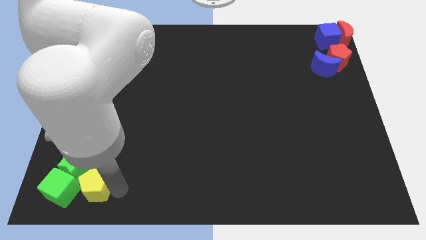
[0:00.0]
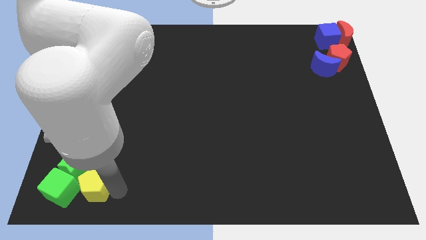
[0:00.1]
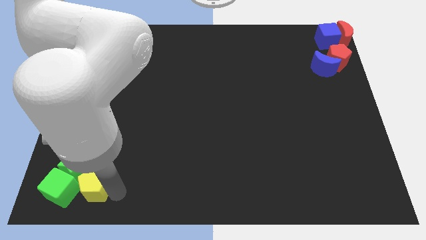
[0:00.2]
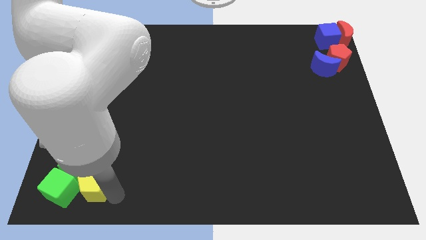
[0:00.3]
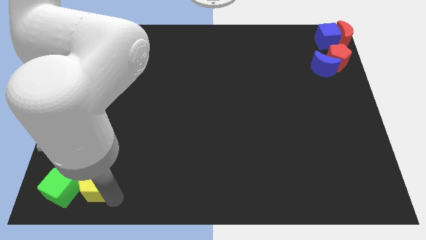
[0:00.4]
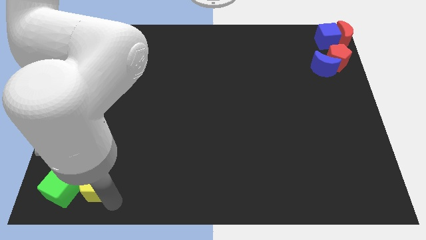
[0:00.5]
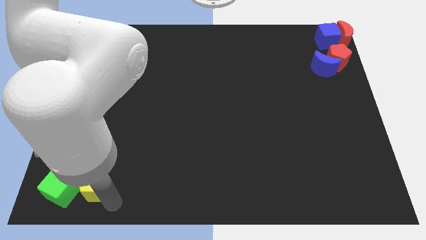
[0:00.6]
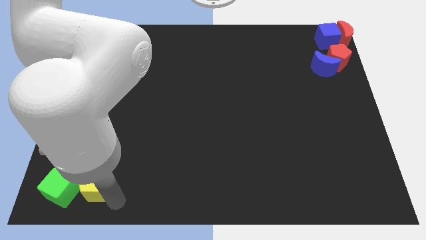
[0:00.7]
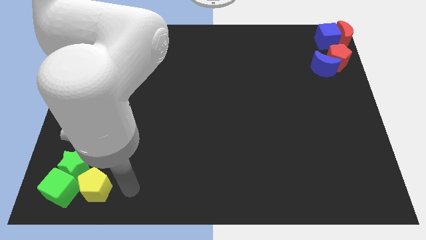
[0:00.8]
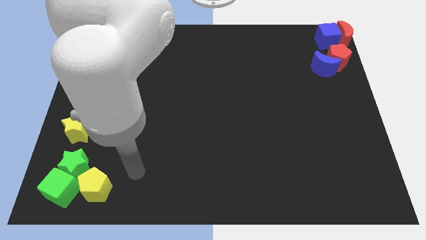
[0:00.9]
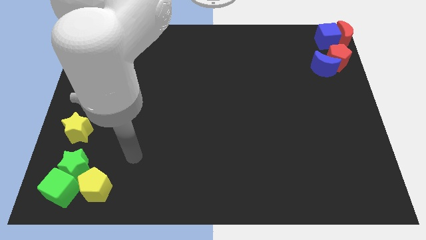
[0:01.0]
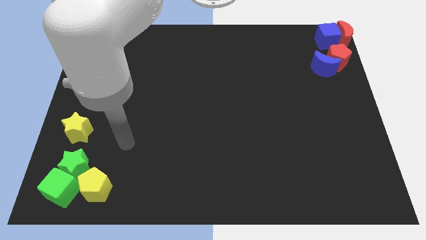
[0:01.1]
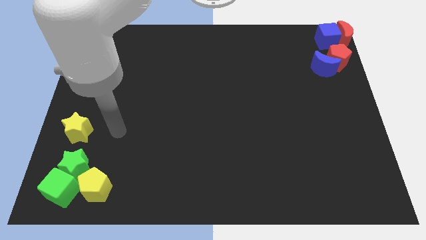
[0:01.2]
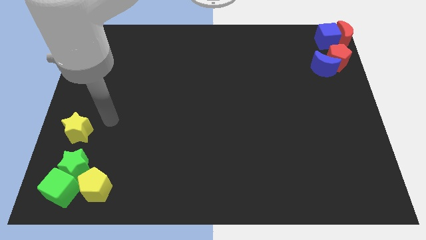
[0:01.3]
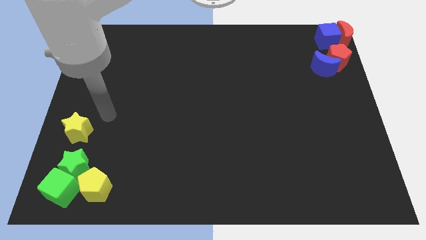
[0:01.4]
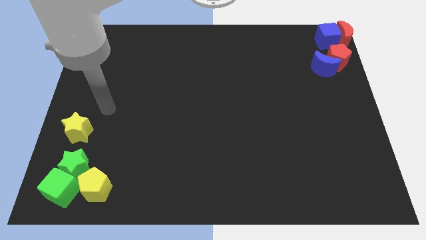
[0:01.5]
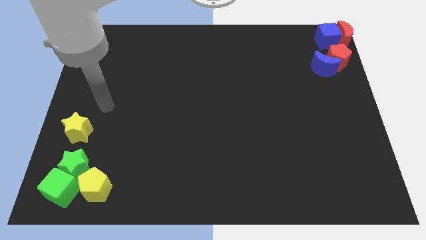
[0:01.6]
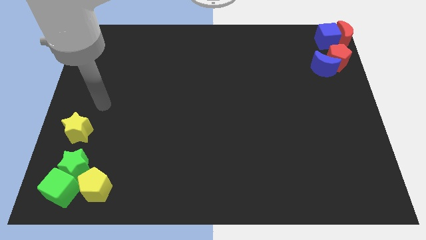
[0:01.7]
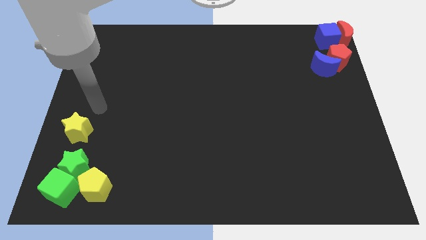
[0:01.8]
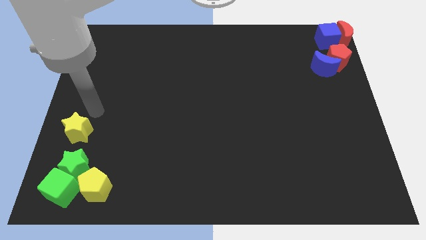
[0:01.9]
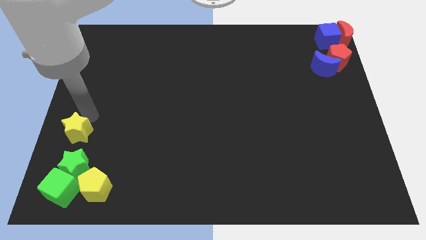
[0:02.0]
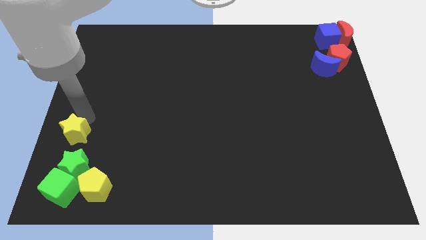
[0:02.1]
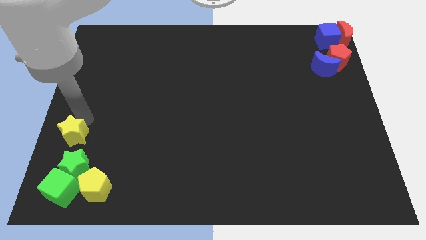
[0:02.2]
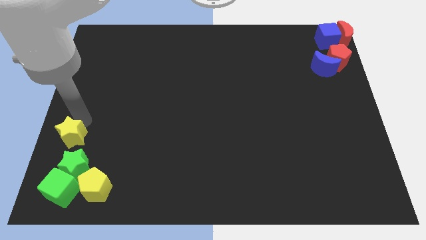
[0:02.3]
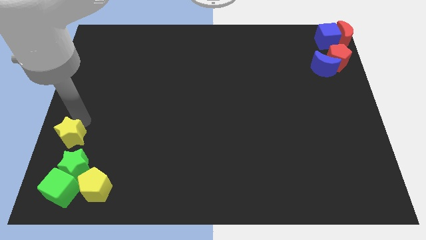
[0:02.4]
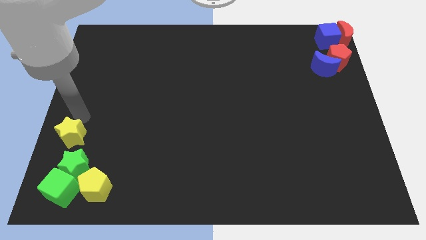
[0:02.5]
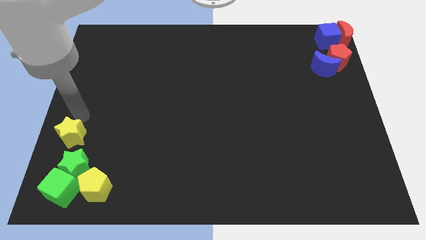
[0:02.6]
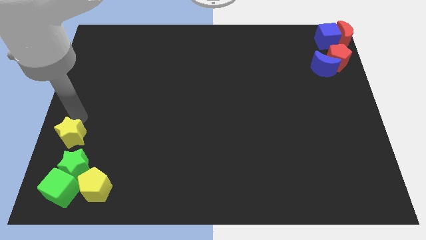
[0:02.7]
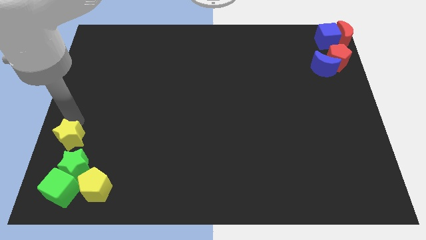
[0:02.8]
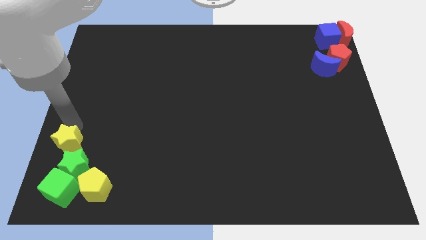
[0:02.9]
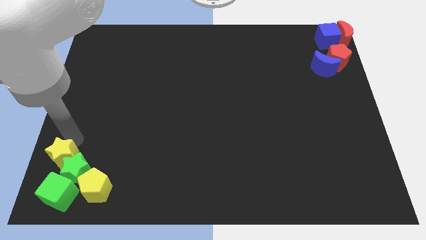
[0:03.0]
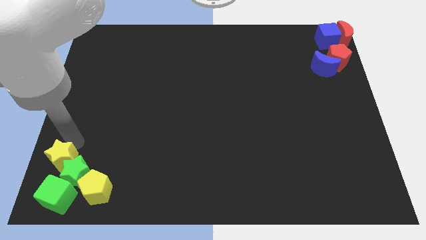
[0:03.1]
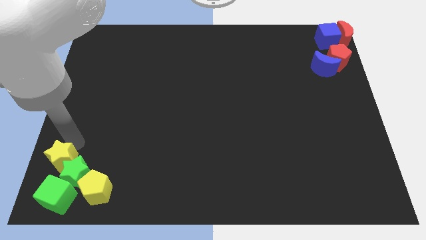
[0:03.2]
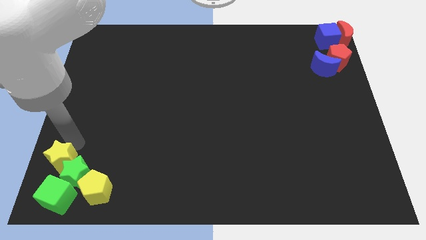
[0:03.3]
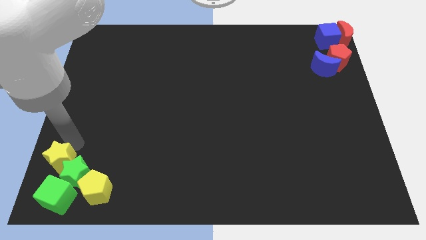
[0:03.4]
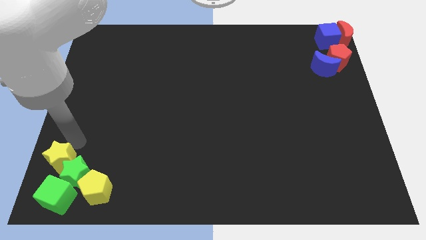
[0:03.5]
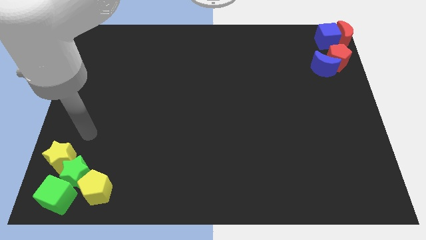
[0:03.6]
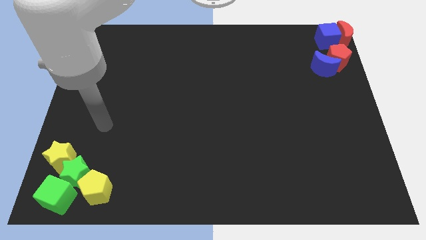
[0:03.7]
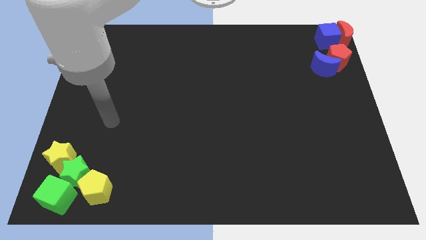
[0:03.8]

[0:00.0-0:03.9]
push the yellow star into the green star

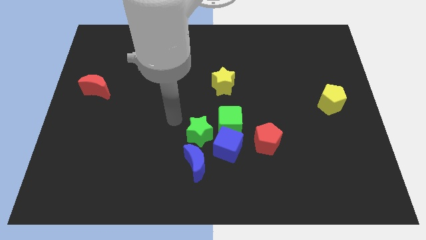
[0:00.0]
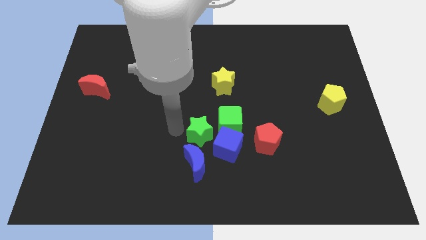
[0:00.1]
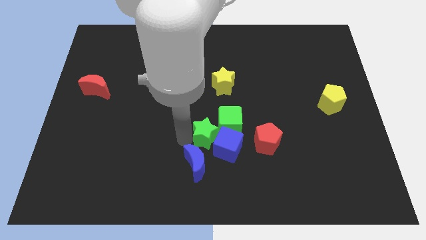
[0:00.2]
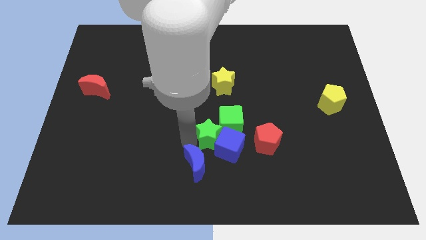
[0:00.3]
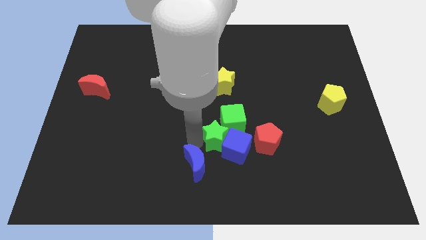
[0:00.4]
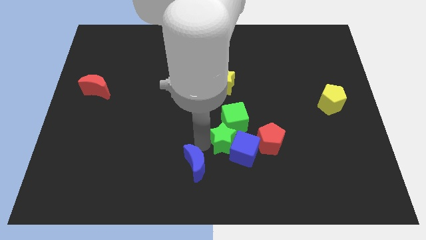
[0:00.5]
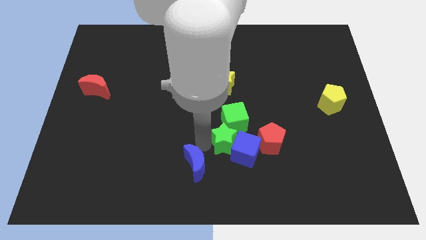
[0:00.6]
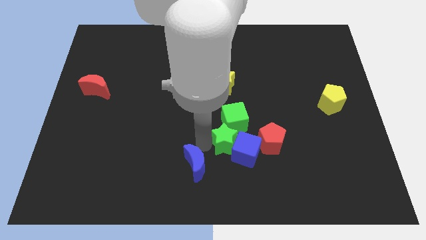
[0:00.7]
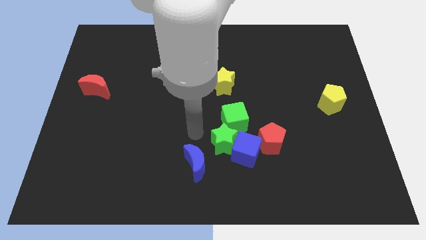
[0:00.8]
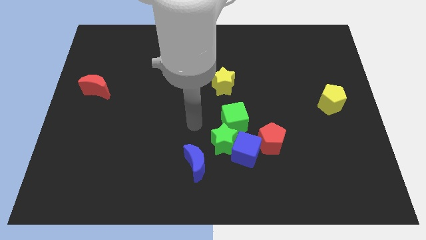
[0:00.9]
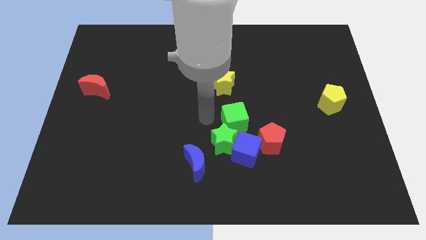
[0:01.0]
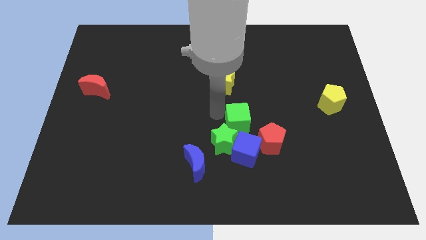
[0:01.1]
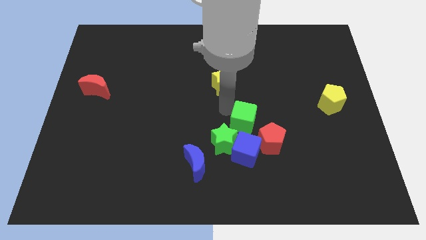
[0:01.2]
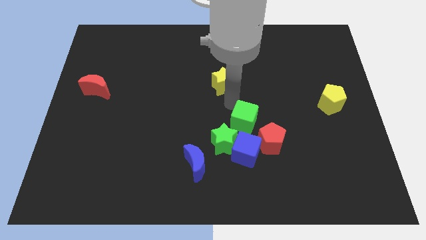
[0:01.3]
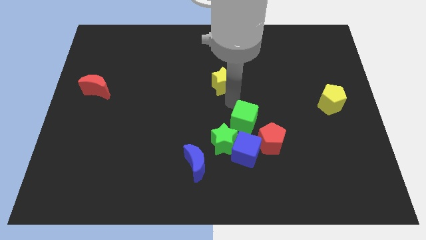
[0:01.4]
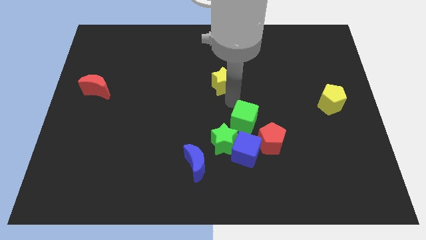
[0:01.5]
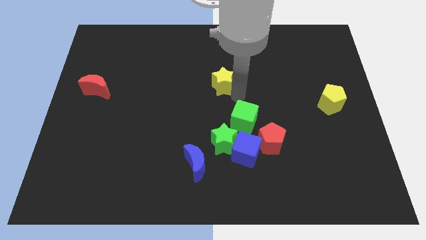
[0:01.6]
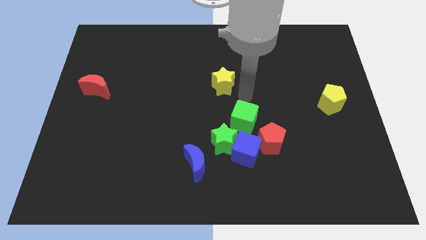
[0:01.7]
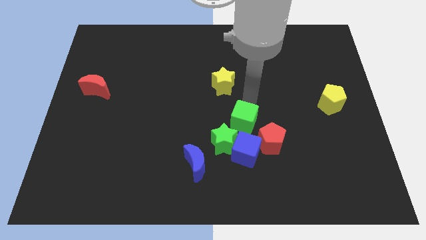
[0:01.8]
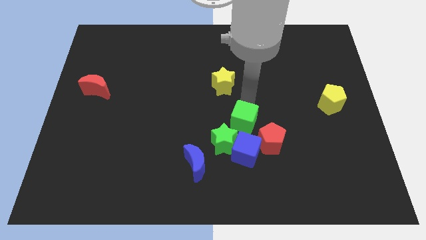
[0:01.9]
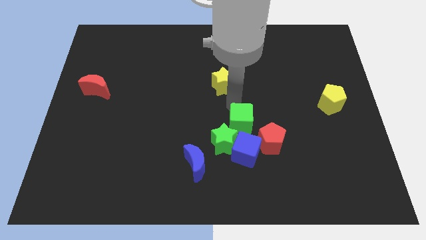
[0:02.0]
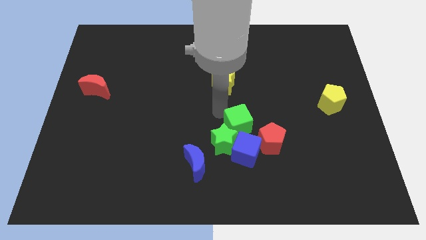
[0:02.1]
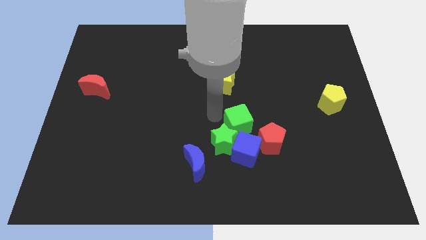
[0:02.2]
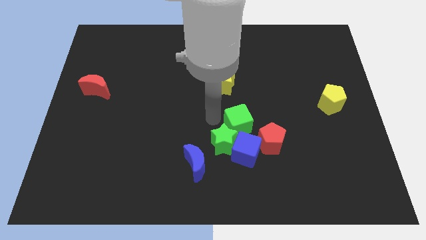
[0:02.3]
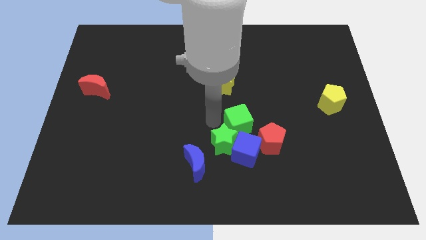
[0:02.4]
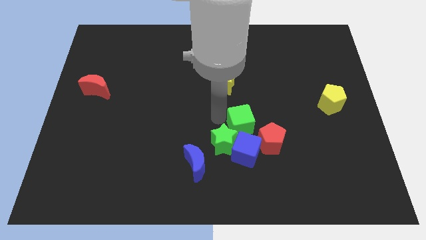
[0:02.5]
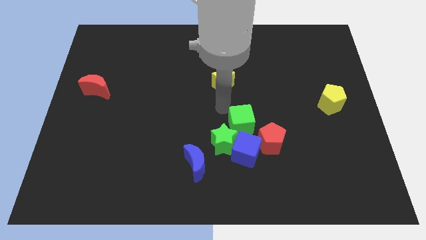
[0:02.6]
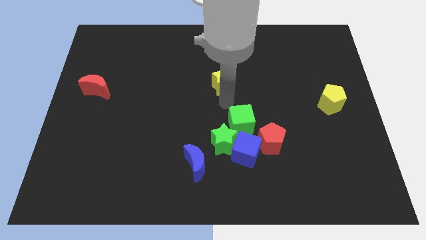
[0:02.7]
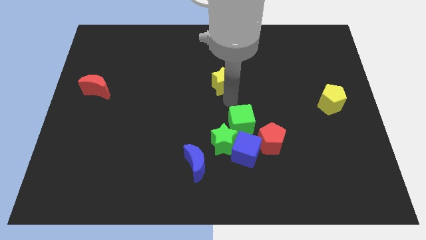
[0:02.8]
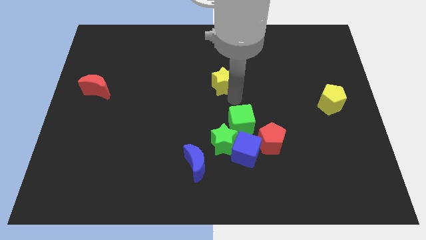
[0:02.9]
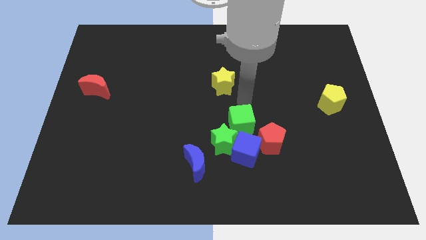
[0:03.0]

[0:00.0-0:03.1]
push the green star and green cube into the blue cube

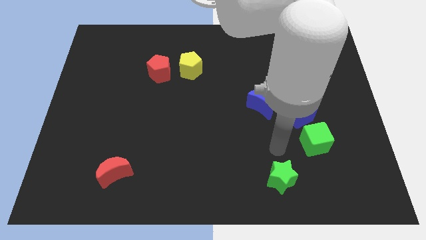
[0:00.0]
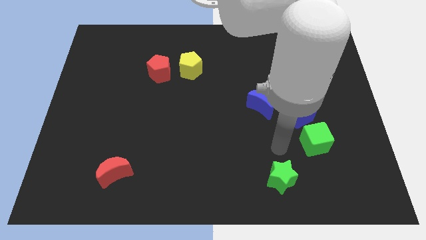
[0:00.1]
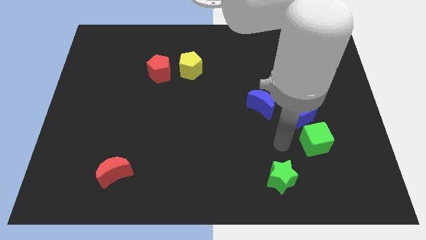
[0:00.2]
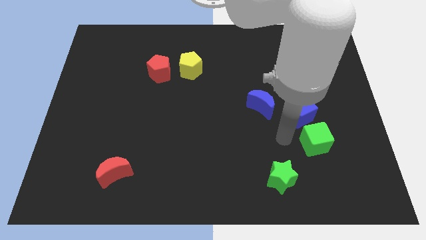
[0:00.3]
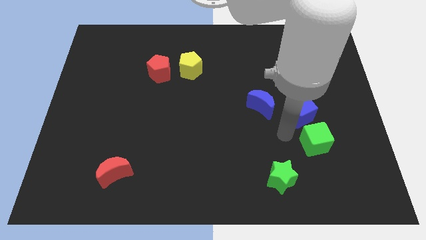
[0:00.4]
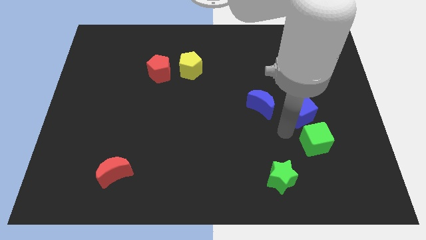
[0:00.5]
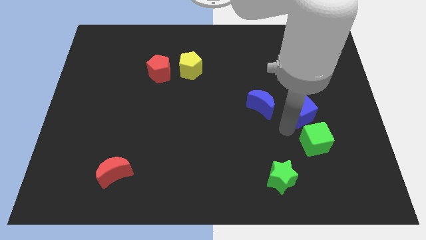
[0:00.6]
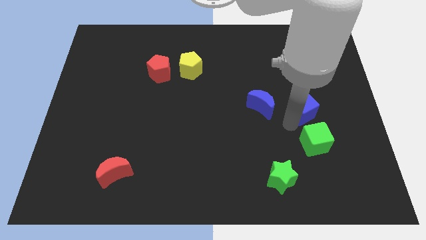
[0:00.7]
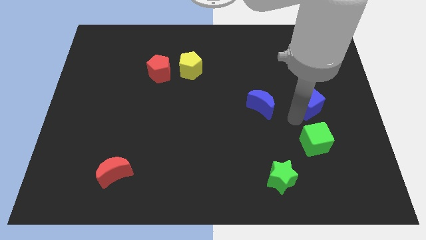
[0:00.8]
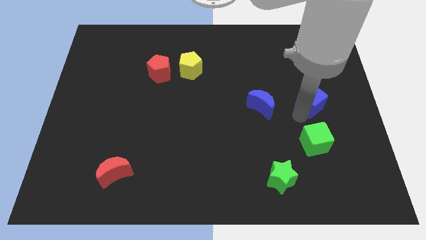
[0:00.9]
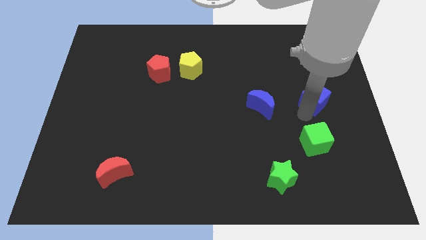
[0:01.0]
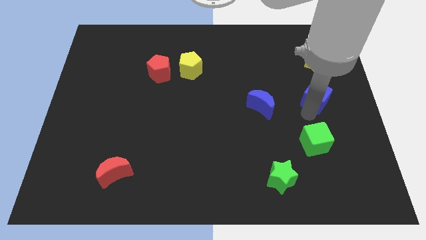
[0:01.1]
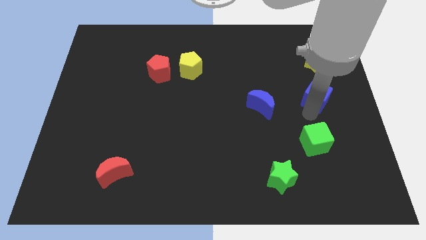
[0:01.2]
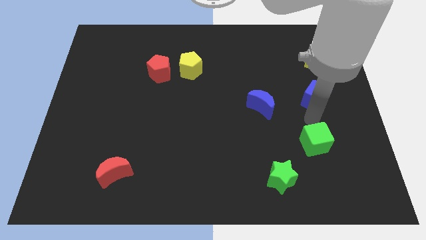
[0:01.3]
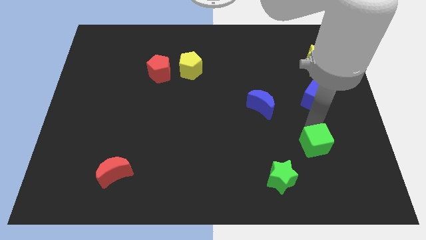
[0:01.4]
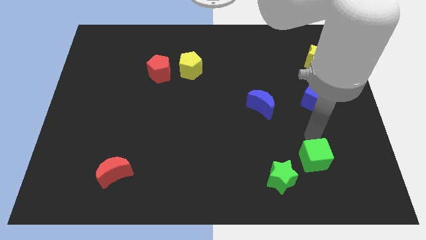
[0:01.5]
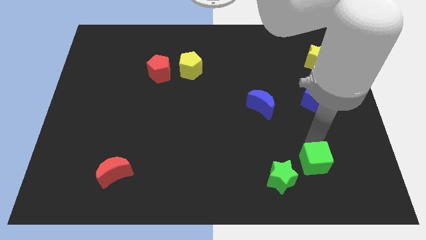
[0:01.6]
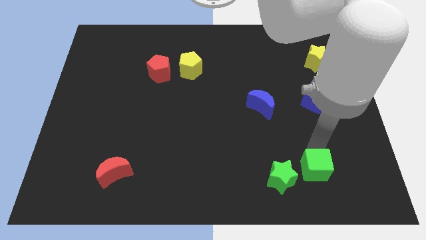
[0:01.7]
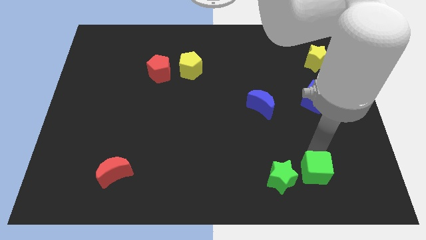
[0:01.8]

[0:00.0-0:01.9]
move green cube right to green star
